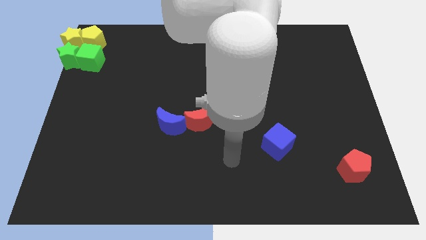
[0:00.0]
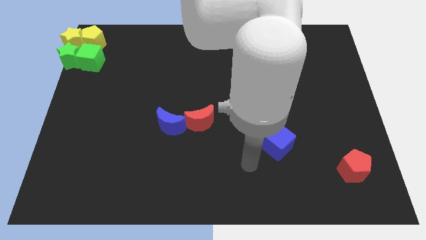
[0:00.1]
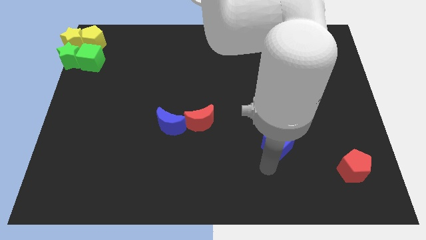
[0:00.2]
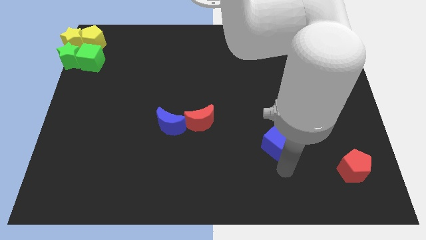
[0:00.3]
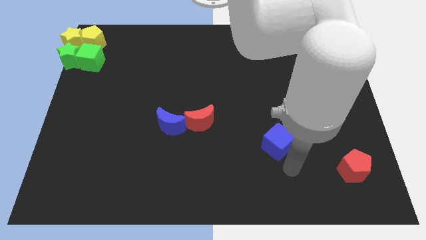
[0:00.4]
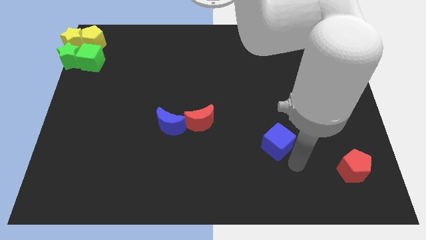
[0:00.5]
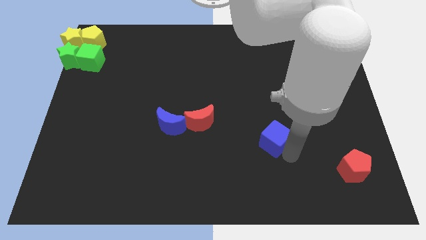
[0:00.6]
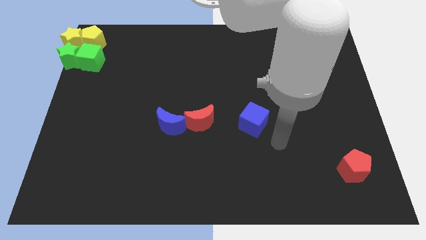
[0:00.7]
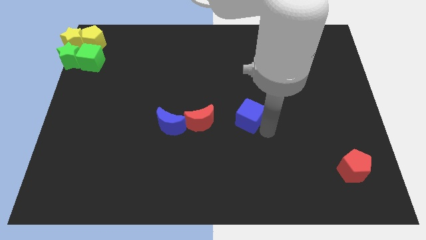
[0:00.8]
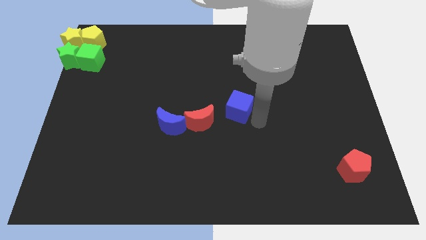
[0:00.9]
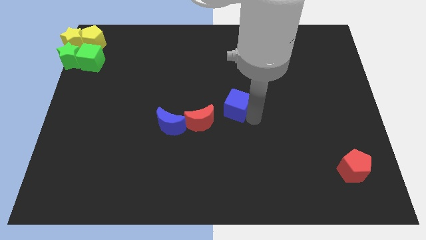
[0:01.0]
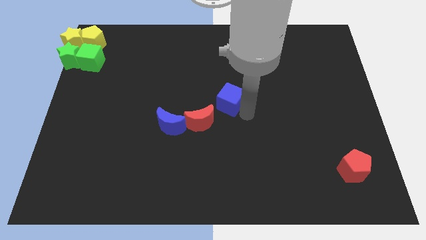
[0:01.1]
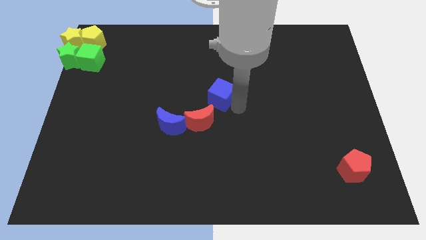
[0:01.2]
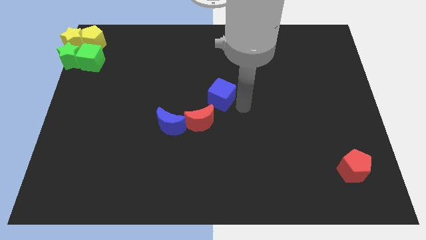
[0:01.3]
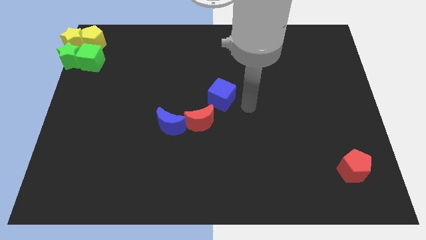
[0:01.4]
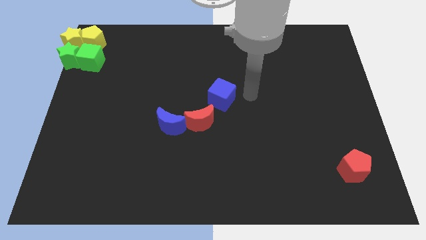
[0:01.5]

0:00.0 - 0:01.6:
move the blue cube to the top right side of the red crescent

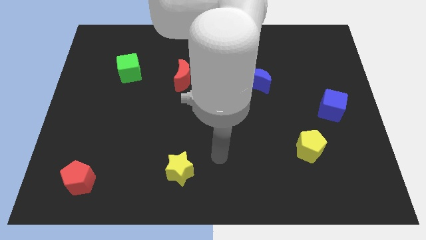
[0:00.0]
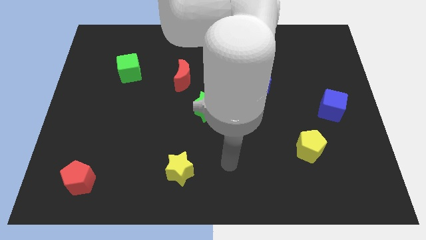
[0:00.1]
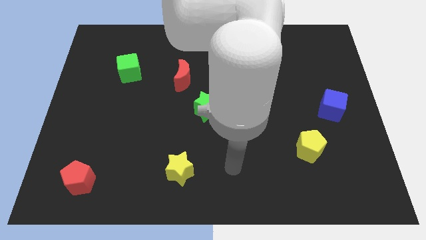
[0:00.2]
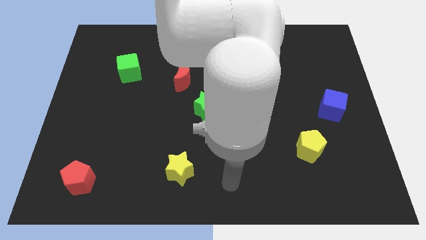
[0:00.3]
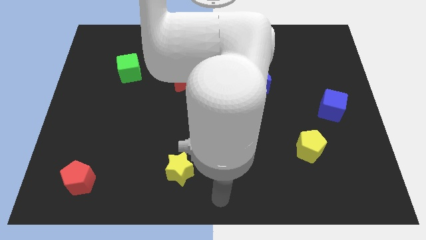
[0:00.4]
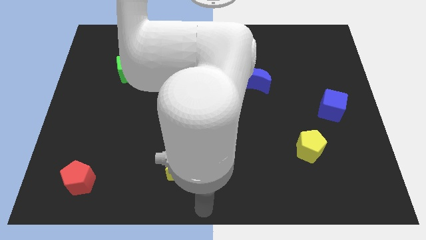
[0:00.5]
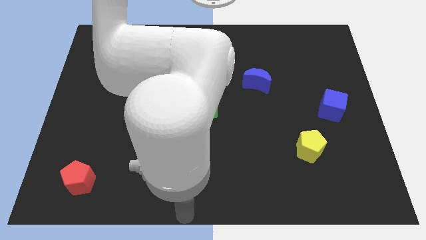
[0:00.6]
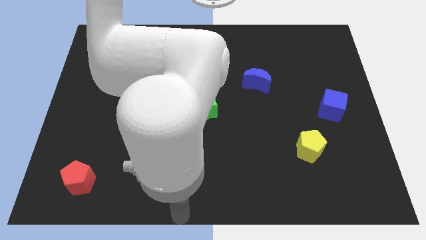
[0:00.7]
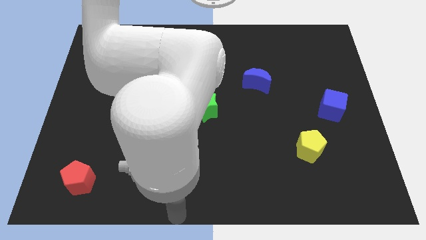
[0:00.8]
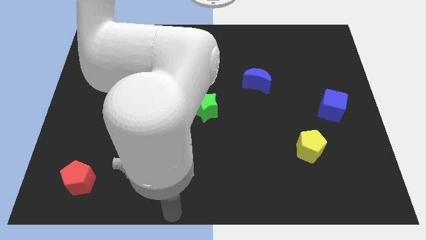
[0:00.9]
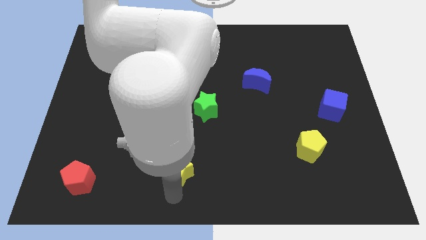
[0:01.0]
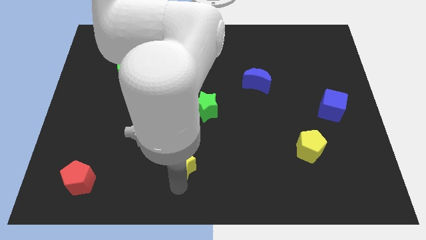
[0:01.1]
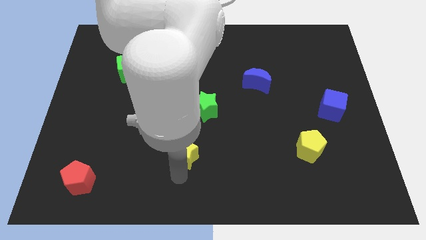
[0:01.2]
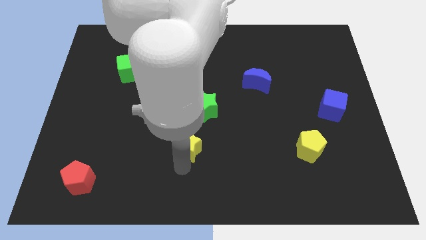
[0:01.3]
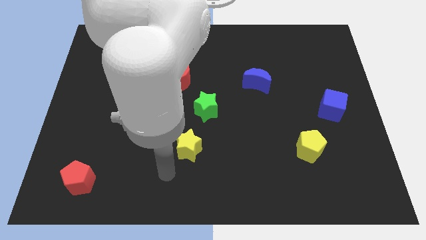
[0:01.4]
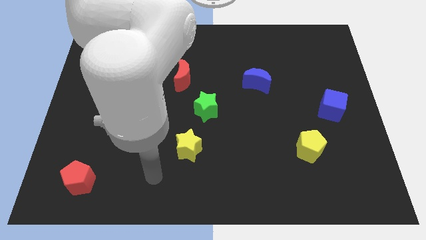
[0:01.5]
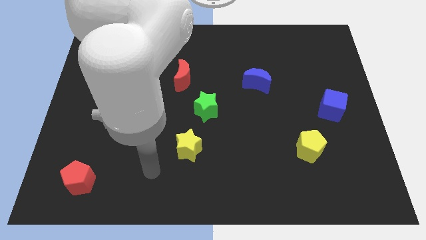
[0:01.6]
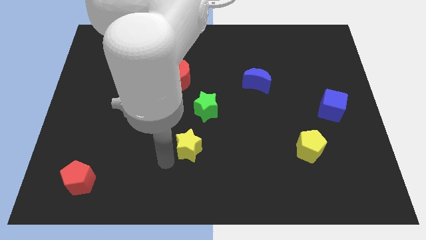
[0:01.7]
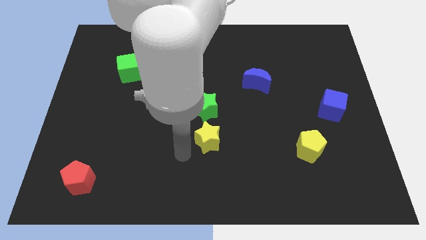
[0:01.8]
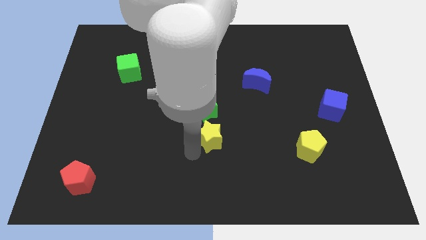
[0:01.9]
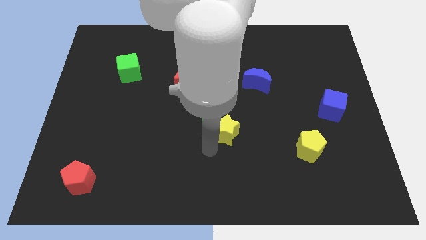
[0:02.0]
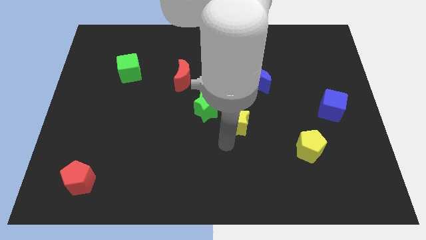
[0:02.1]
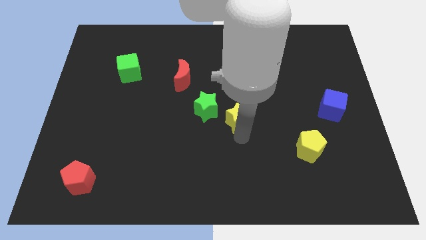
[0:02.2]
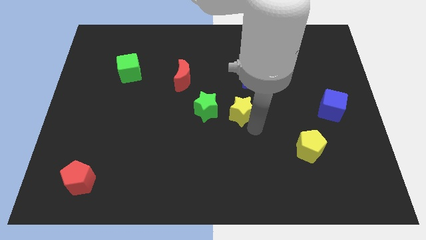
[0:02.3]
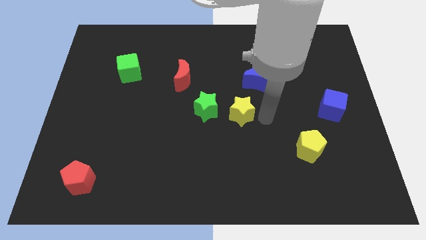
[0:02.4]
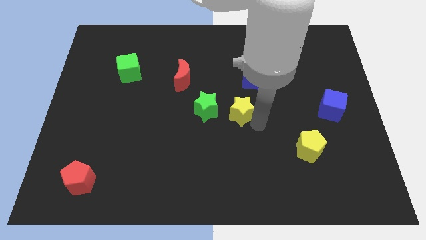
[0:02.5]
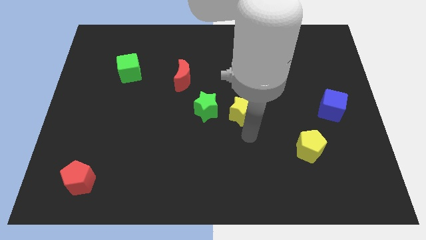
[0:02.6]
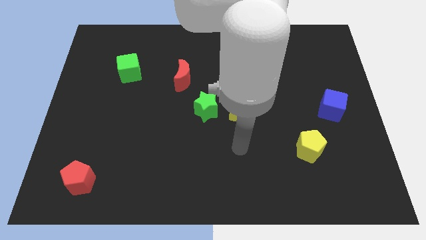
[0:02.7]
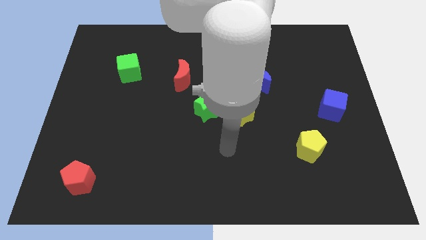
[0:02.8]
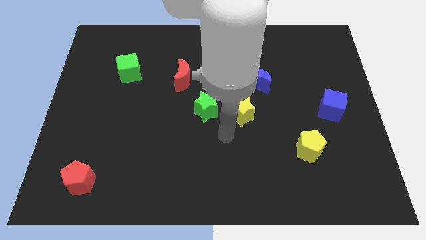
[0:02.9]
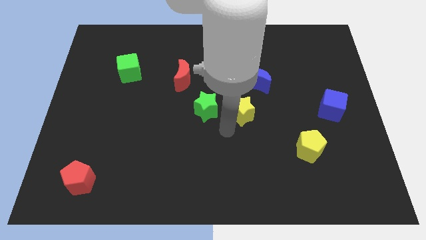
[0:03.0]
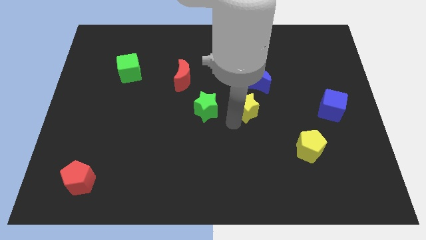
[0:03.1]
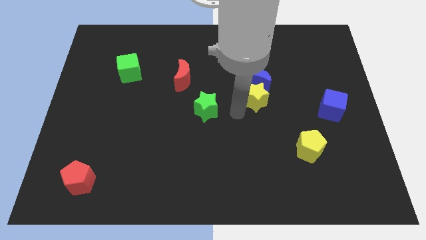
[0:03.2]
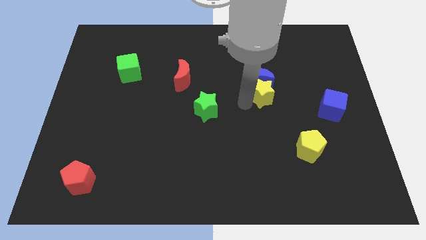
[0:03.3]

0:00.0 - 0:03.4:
push the yellow star into the bottom side of the blue crescent

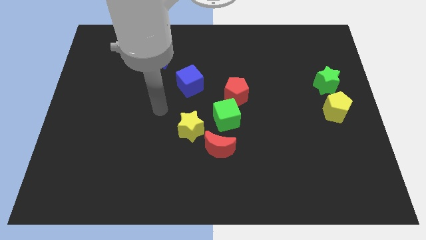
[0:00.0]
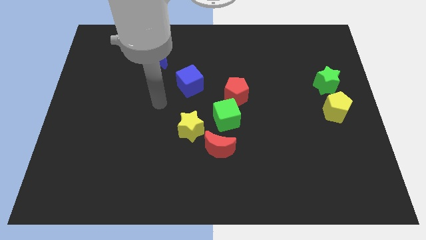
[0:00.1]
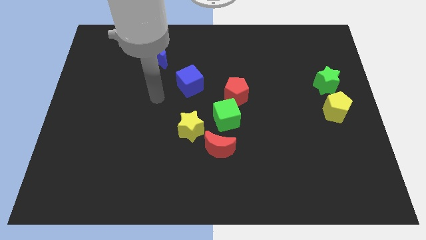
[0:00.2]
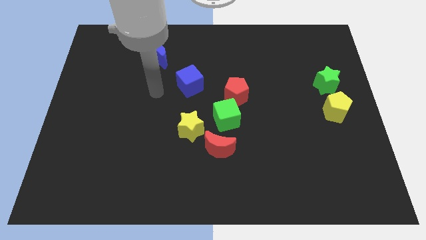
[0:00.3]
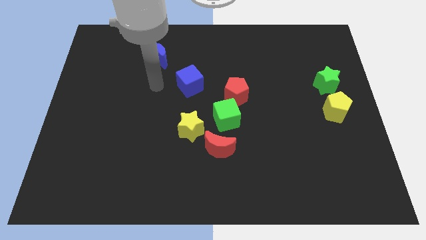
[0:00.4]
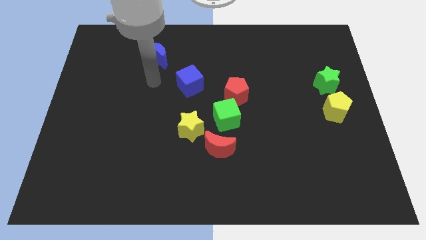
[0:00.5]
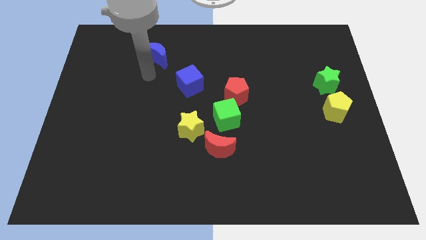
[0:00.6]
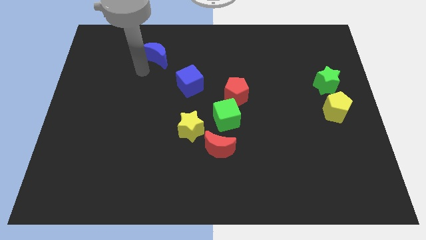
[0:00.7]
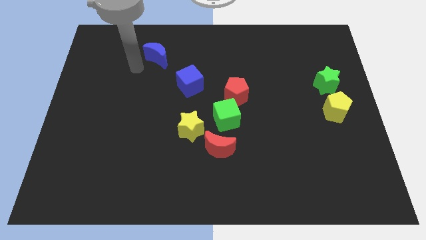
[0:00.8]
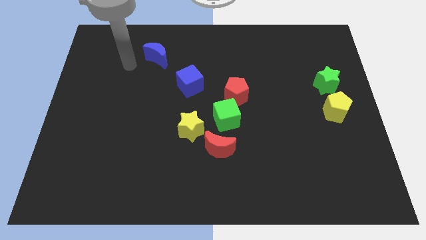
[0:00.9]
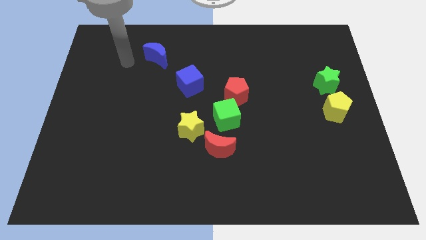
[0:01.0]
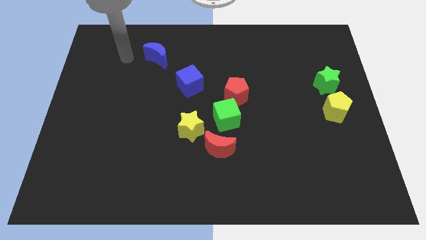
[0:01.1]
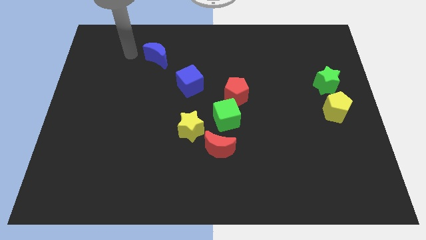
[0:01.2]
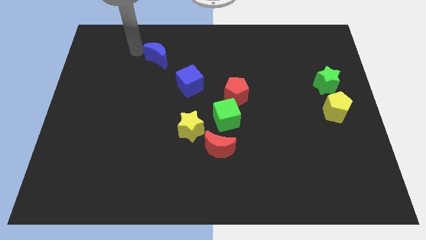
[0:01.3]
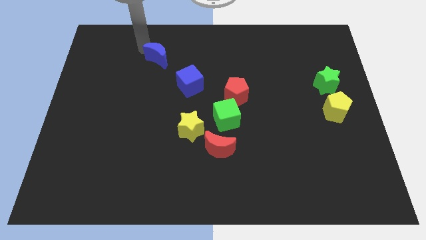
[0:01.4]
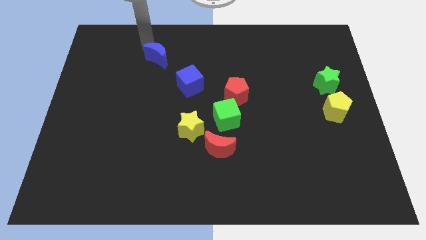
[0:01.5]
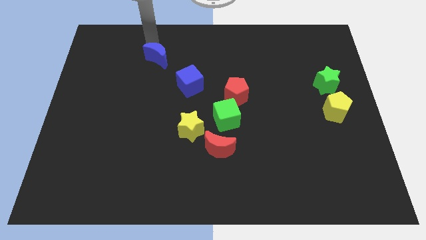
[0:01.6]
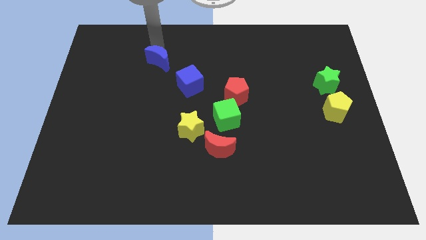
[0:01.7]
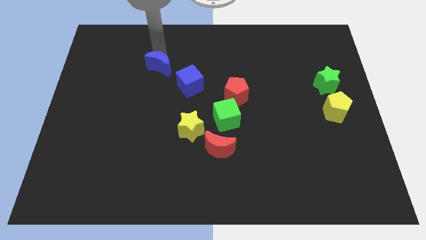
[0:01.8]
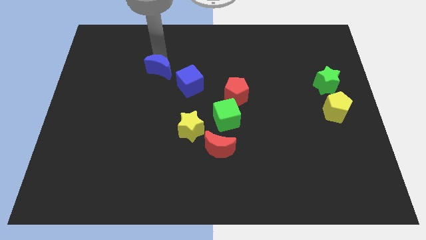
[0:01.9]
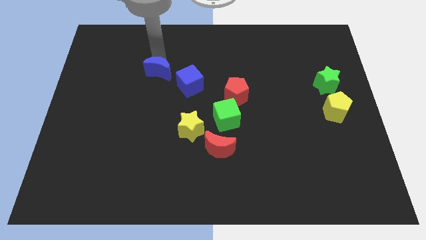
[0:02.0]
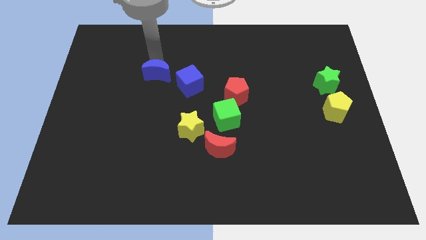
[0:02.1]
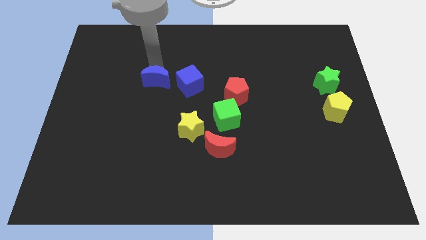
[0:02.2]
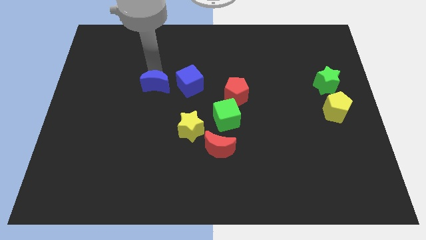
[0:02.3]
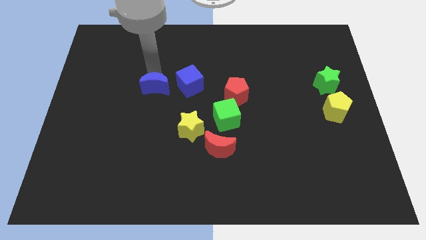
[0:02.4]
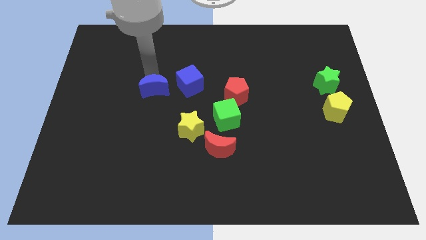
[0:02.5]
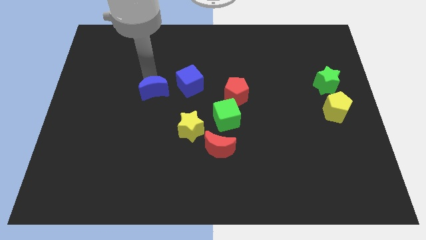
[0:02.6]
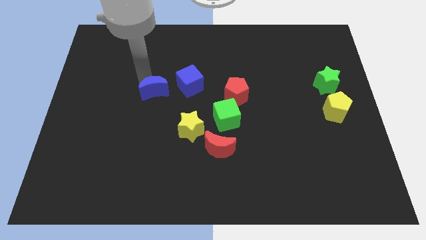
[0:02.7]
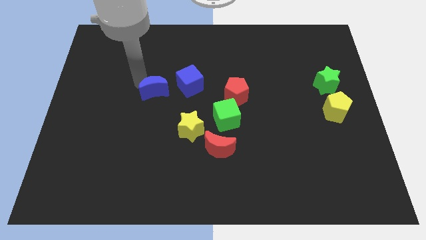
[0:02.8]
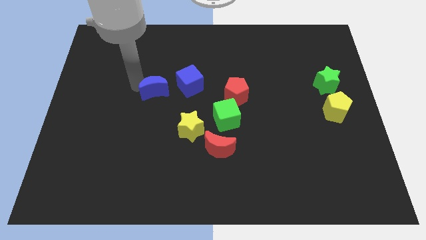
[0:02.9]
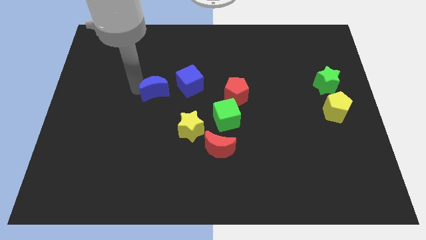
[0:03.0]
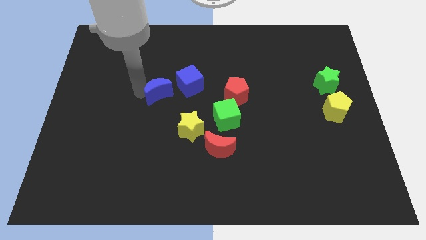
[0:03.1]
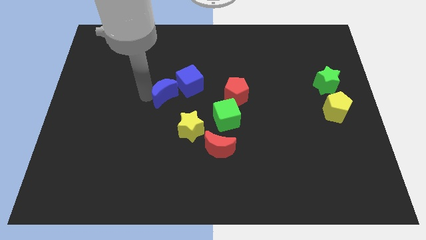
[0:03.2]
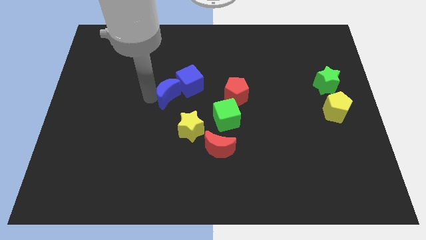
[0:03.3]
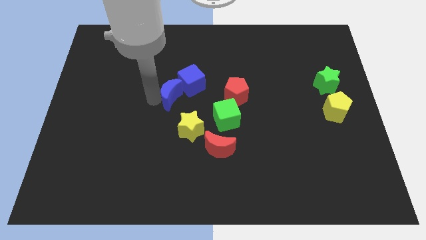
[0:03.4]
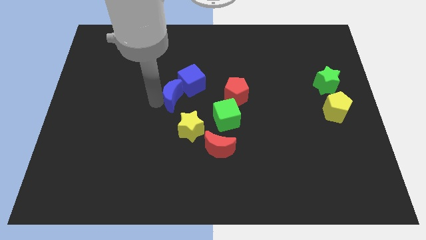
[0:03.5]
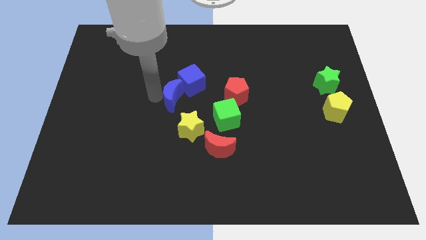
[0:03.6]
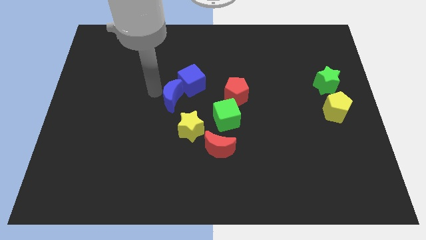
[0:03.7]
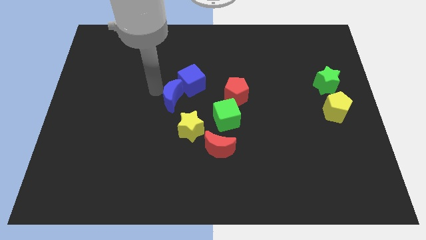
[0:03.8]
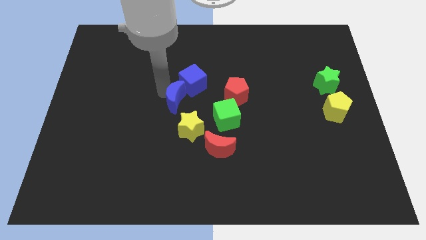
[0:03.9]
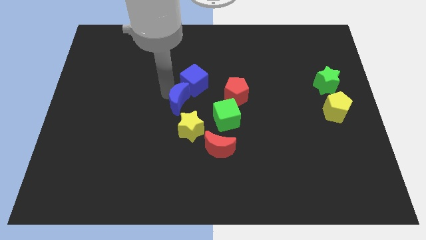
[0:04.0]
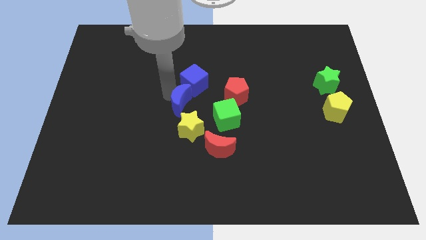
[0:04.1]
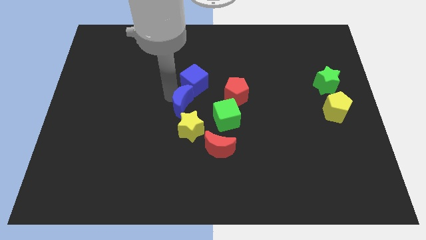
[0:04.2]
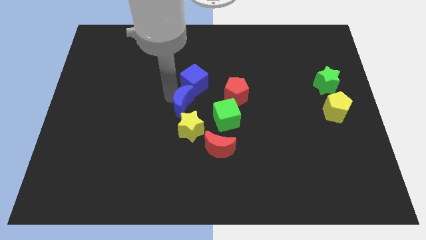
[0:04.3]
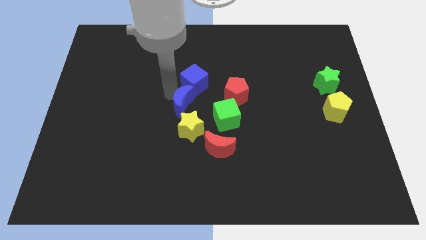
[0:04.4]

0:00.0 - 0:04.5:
place the blue moon in between the blue cube and yellow star
